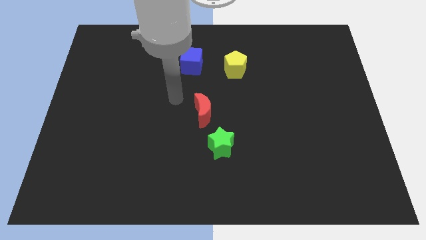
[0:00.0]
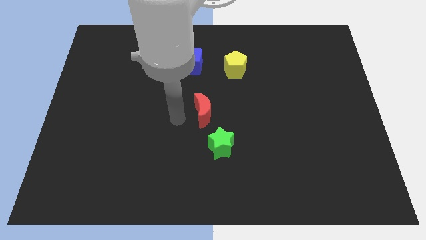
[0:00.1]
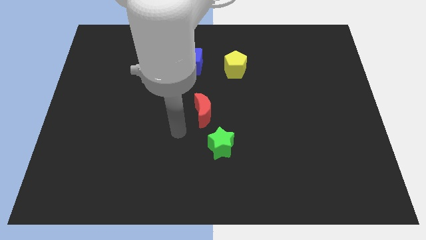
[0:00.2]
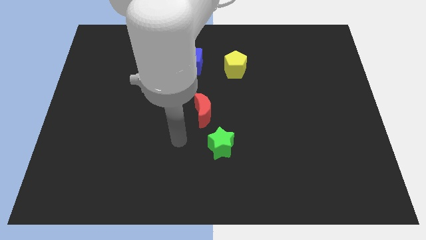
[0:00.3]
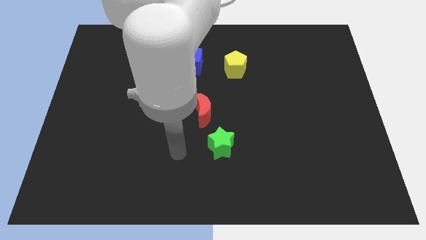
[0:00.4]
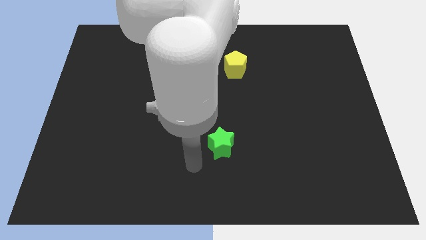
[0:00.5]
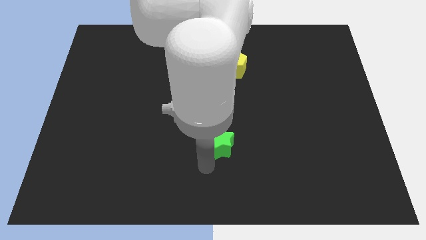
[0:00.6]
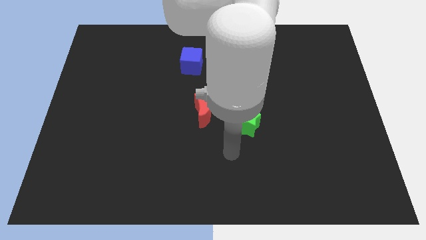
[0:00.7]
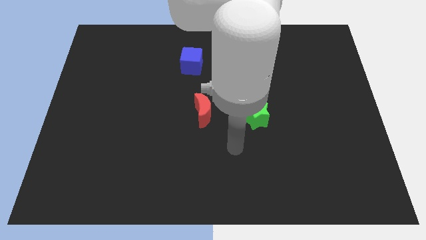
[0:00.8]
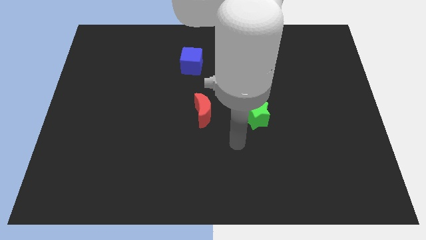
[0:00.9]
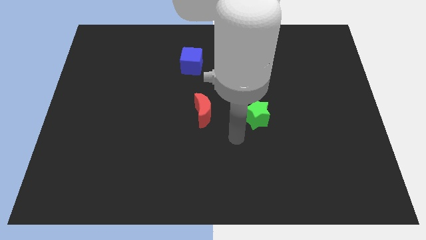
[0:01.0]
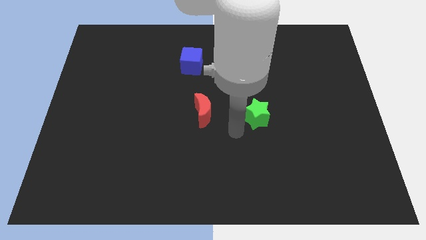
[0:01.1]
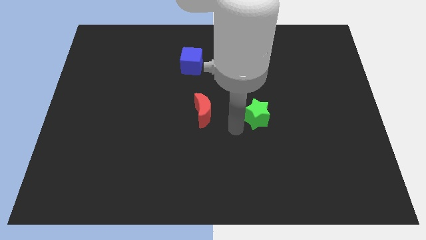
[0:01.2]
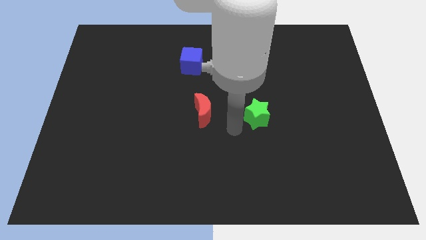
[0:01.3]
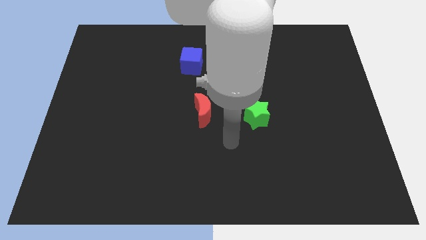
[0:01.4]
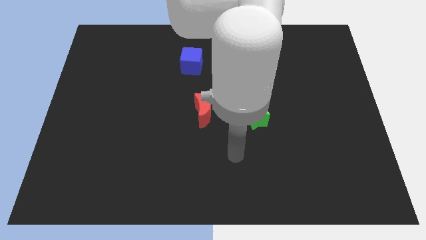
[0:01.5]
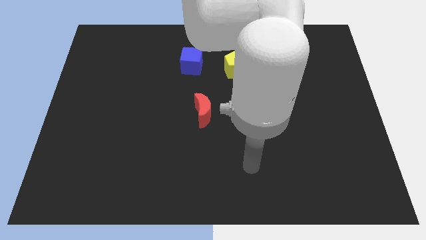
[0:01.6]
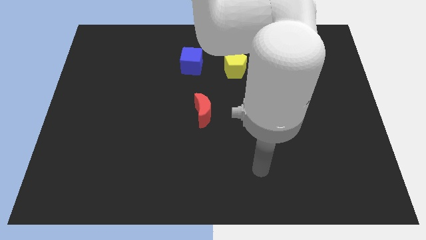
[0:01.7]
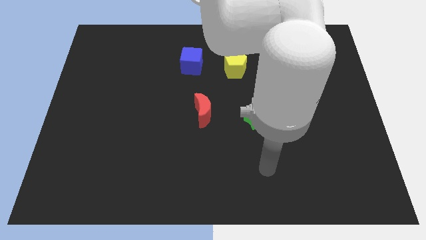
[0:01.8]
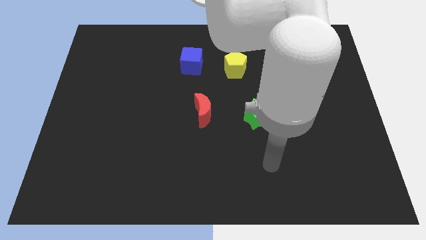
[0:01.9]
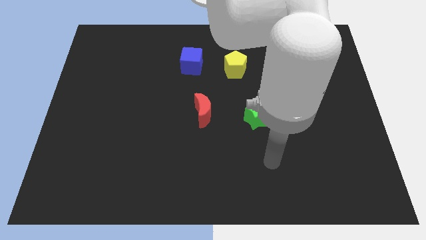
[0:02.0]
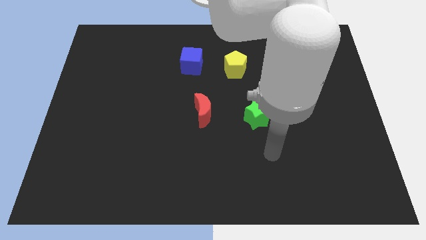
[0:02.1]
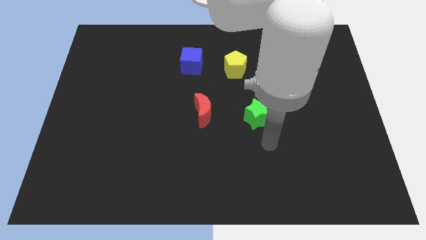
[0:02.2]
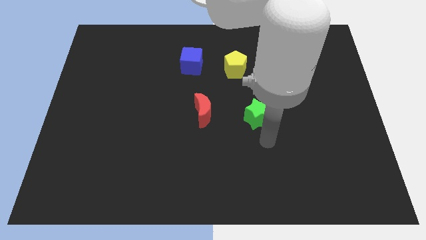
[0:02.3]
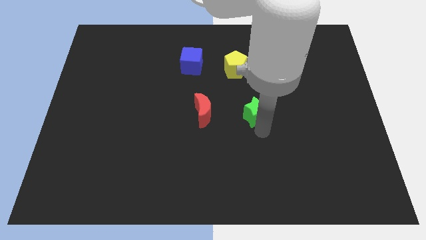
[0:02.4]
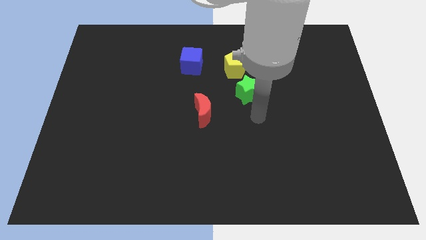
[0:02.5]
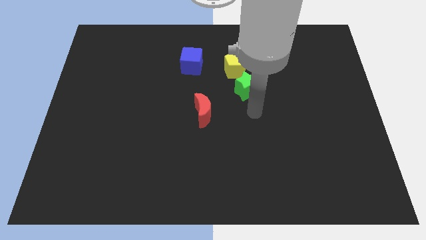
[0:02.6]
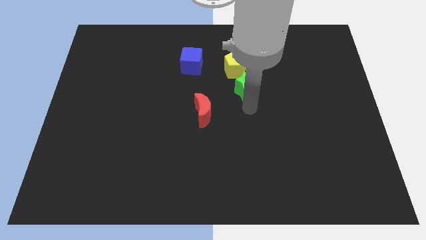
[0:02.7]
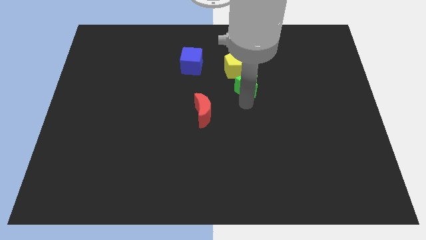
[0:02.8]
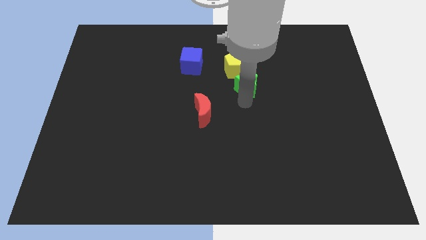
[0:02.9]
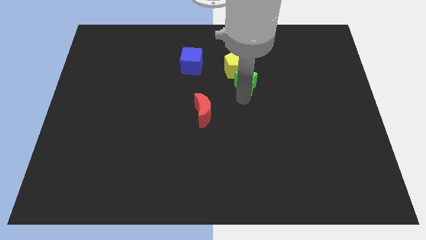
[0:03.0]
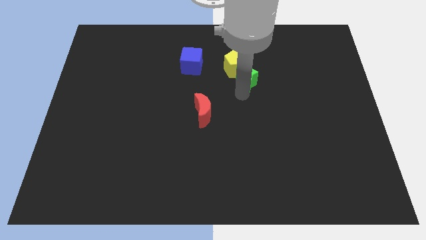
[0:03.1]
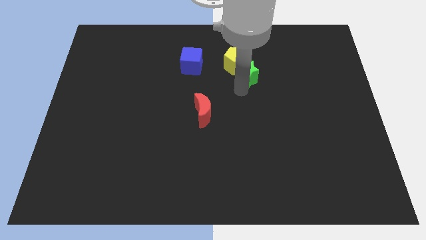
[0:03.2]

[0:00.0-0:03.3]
push the green block next to the yellow pentagon

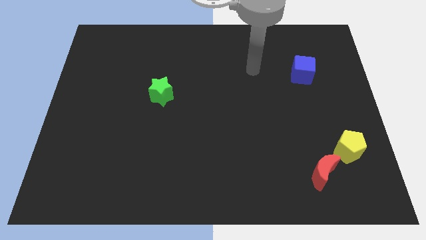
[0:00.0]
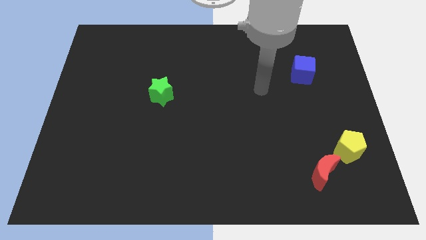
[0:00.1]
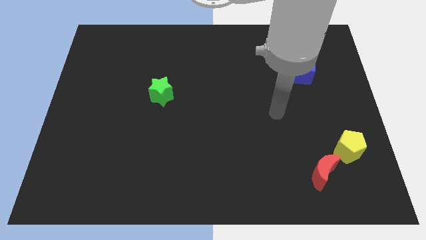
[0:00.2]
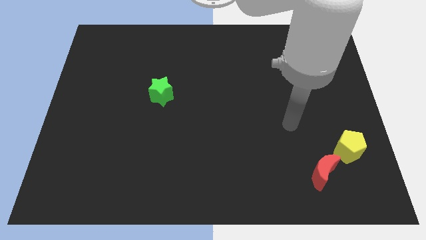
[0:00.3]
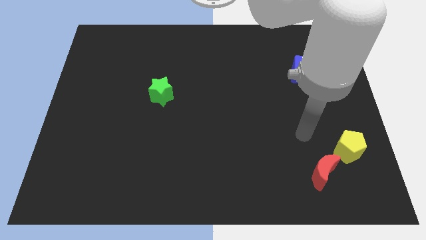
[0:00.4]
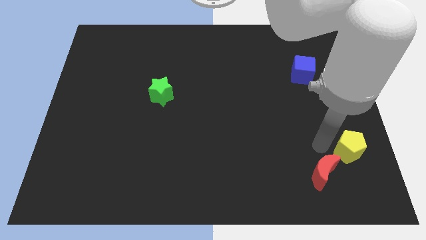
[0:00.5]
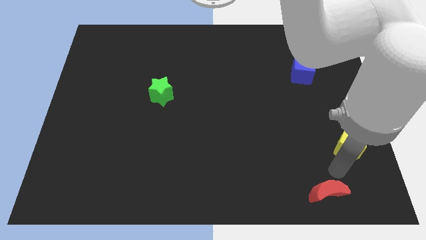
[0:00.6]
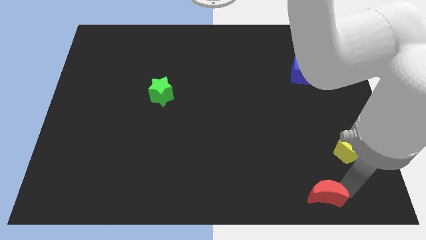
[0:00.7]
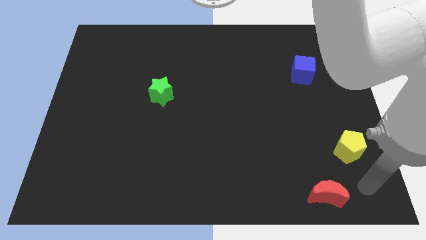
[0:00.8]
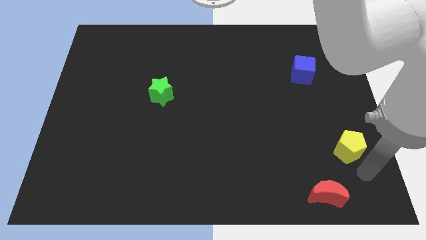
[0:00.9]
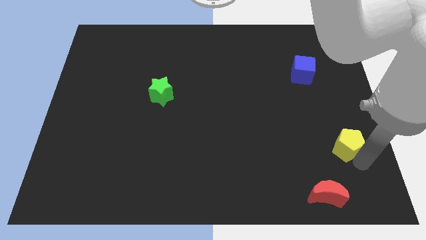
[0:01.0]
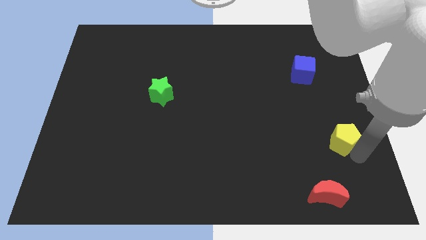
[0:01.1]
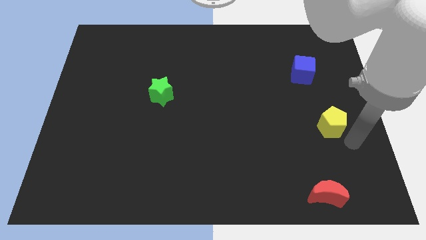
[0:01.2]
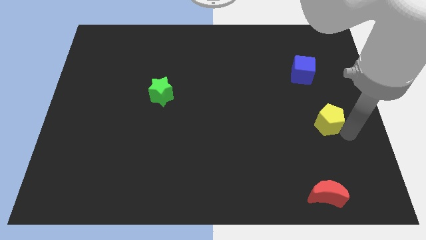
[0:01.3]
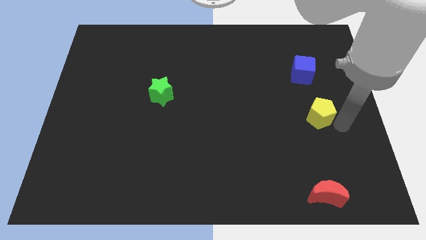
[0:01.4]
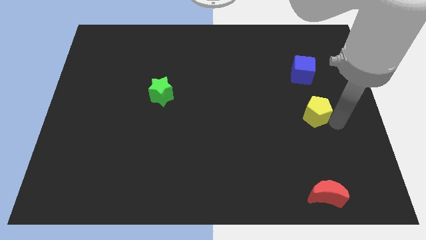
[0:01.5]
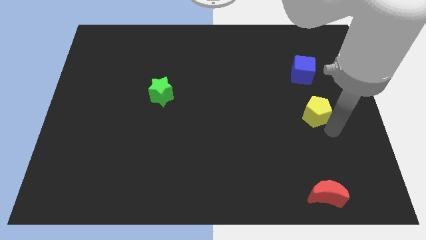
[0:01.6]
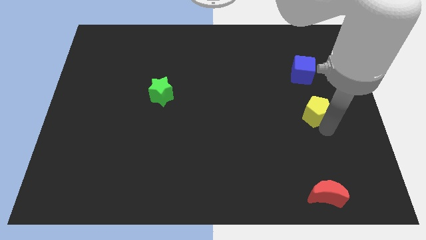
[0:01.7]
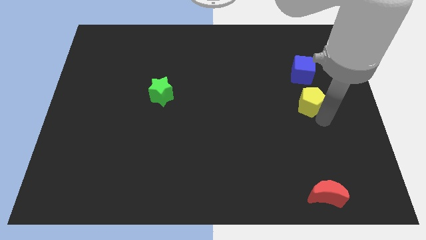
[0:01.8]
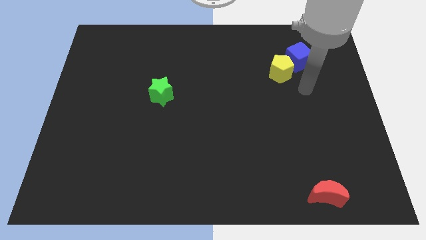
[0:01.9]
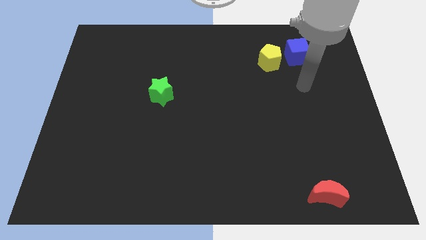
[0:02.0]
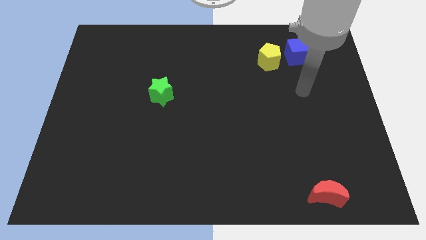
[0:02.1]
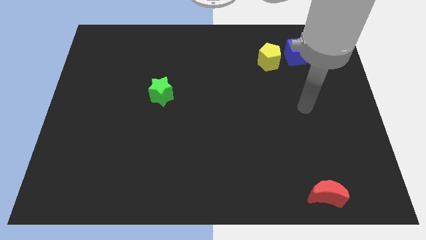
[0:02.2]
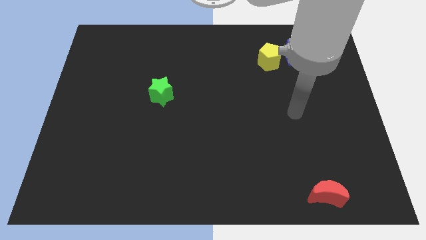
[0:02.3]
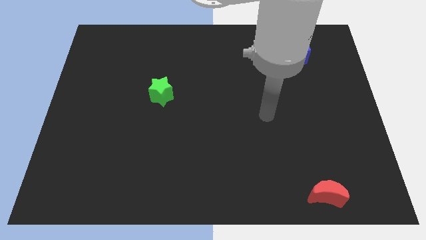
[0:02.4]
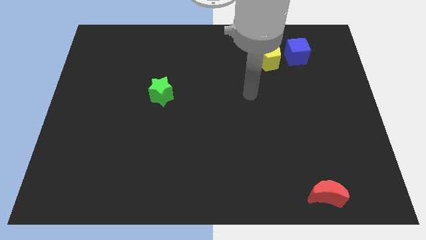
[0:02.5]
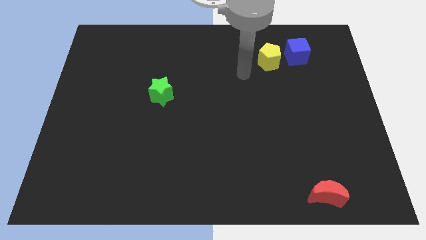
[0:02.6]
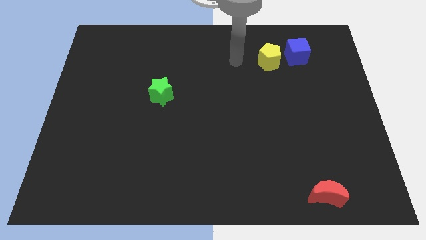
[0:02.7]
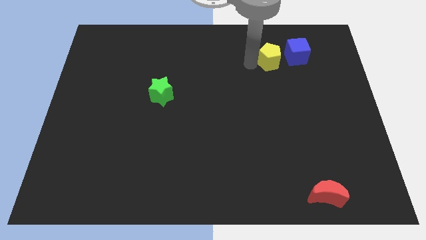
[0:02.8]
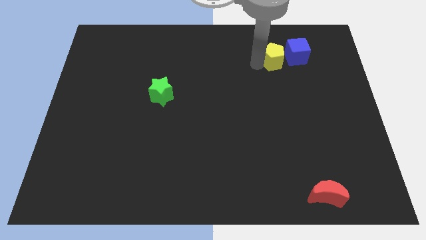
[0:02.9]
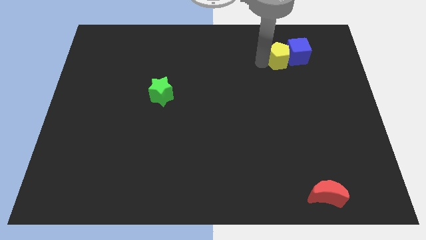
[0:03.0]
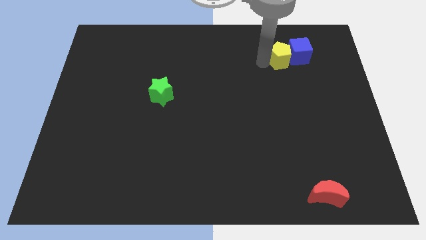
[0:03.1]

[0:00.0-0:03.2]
slide the yellow pentagon towards the blue cube

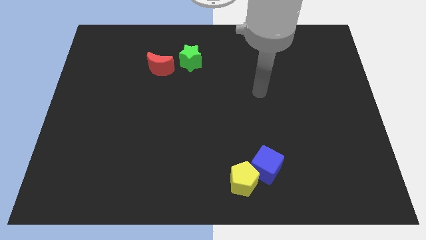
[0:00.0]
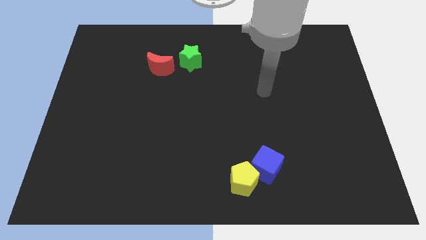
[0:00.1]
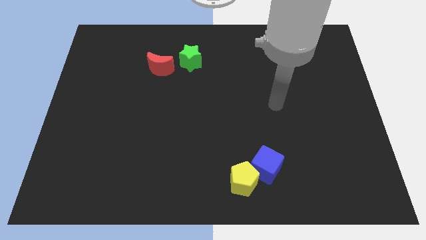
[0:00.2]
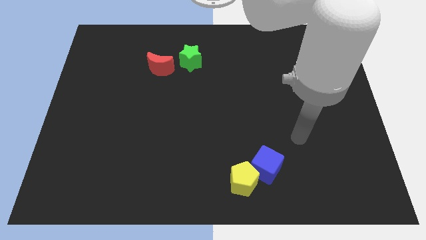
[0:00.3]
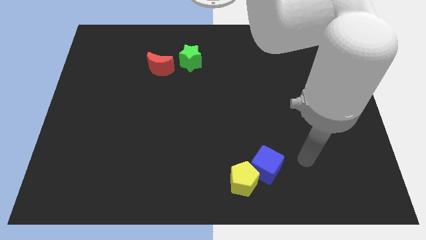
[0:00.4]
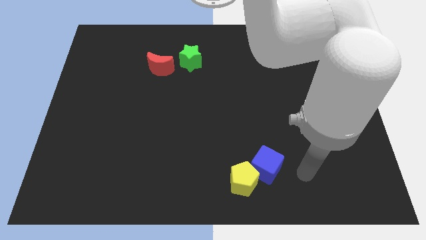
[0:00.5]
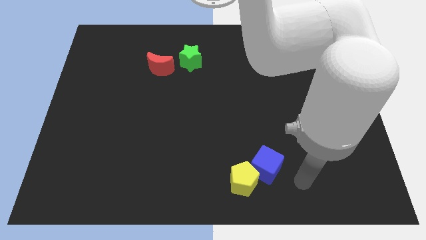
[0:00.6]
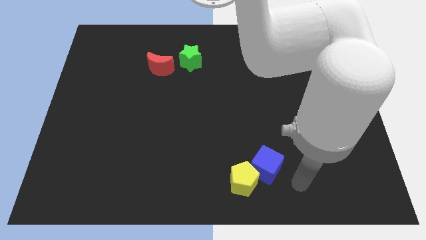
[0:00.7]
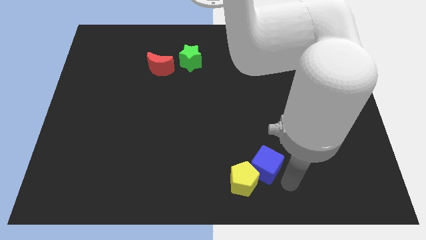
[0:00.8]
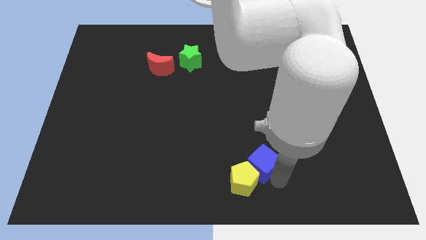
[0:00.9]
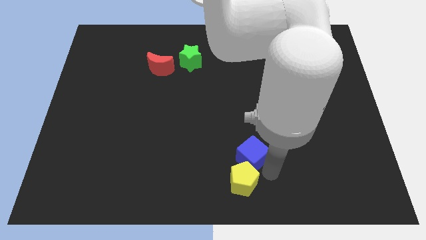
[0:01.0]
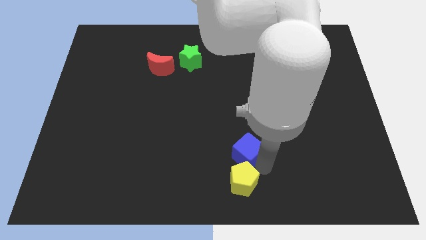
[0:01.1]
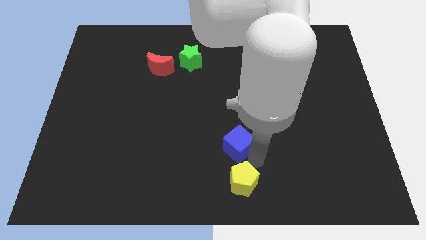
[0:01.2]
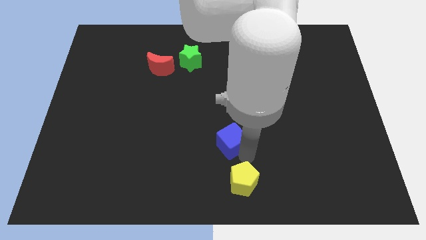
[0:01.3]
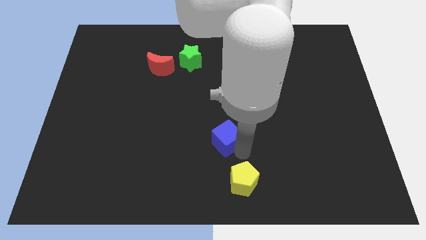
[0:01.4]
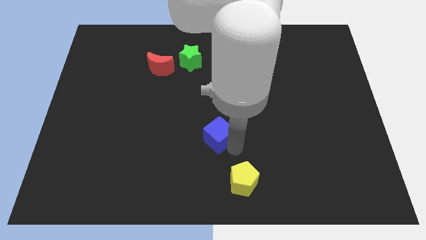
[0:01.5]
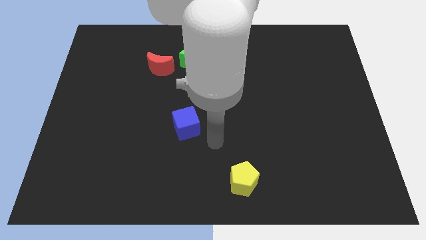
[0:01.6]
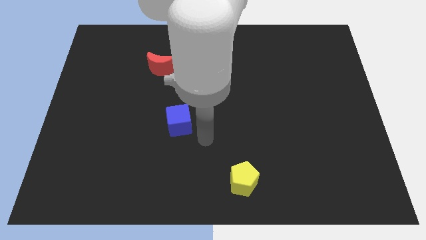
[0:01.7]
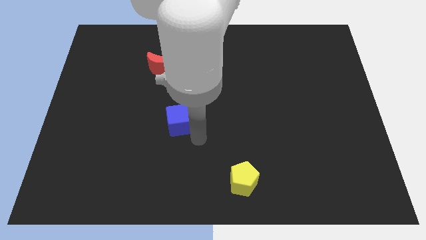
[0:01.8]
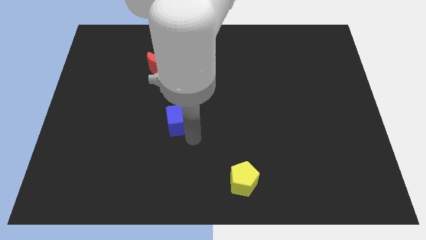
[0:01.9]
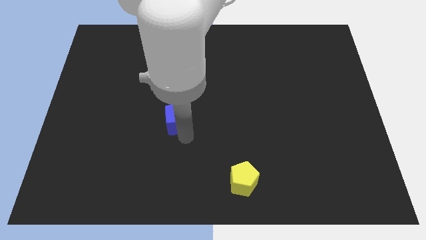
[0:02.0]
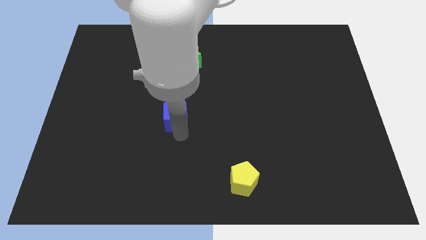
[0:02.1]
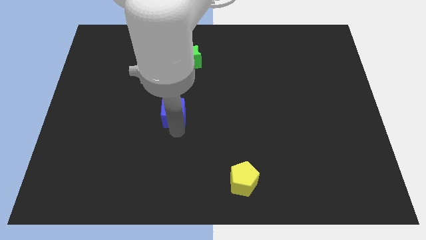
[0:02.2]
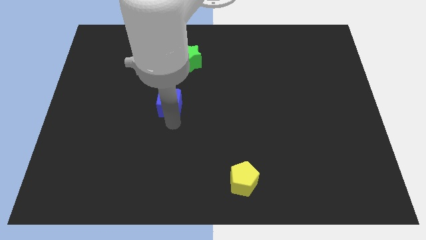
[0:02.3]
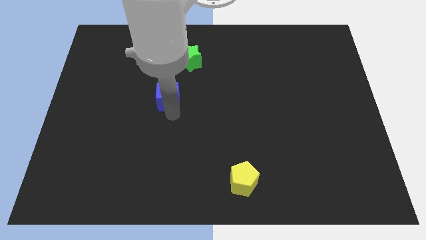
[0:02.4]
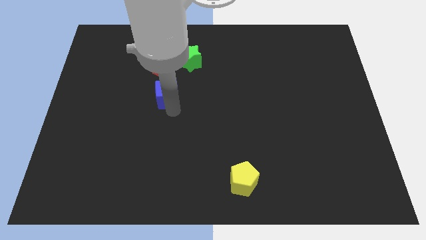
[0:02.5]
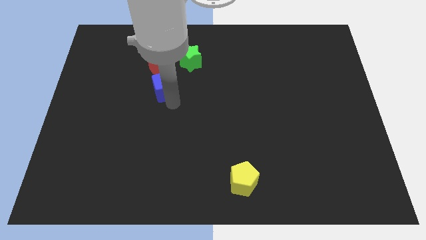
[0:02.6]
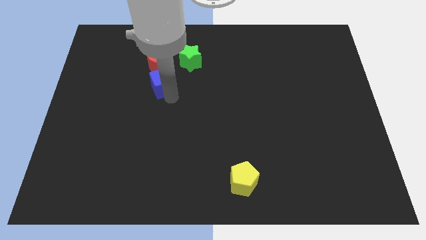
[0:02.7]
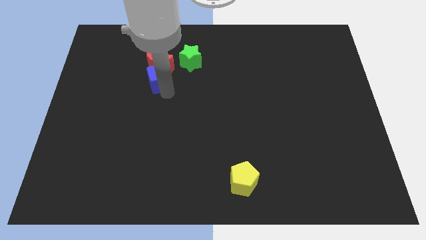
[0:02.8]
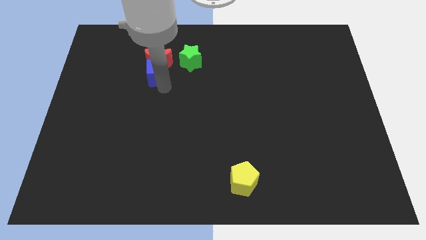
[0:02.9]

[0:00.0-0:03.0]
slide the blue block towards the moon
